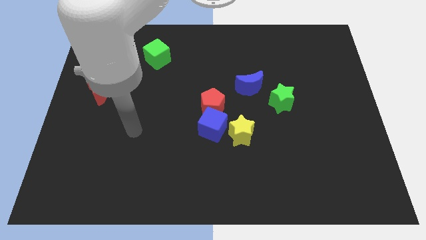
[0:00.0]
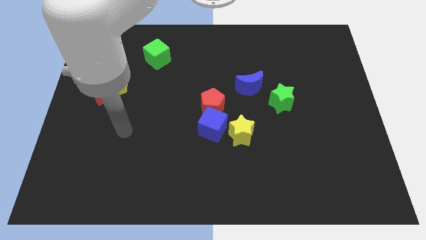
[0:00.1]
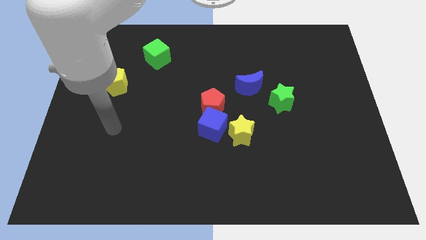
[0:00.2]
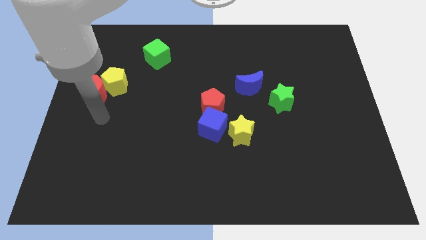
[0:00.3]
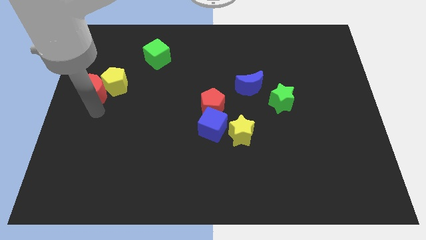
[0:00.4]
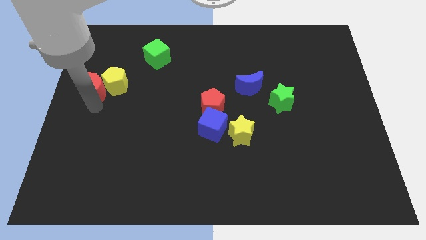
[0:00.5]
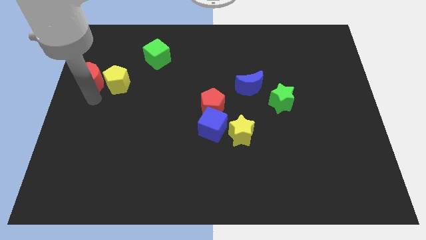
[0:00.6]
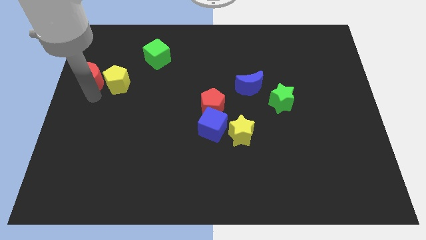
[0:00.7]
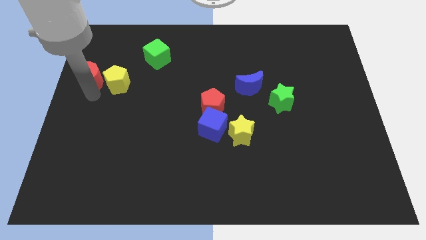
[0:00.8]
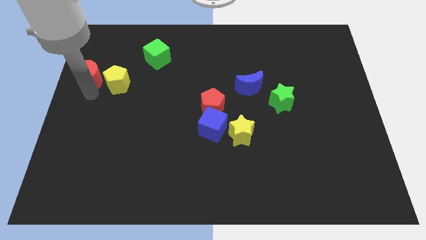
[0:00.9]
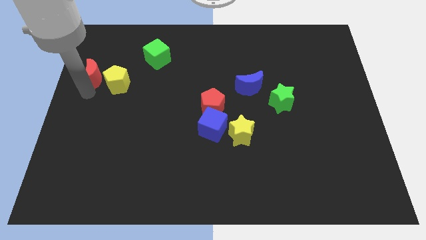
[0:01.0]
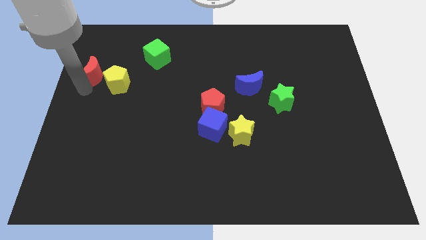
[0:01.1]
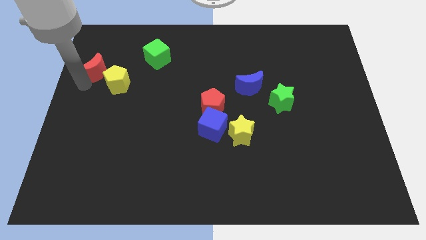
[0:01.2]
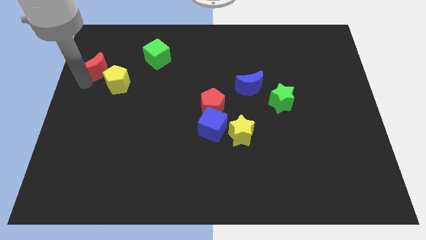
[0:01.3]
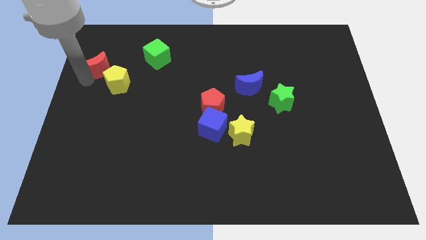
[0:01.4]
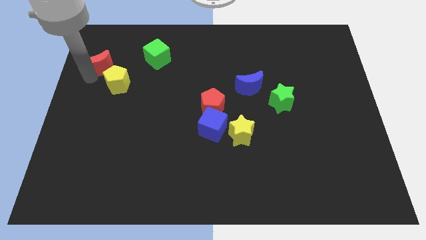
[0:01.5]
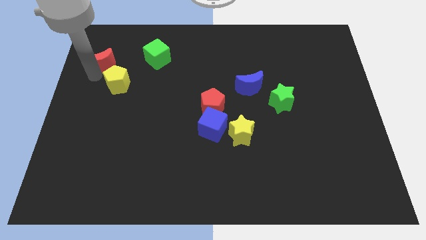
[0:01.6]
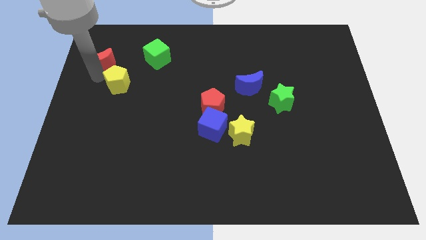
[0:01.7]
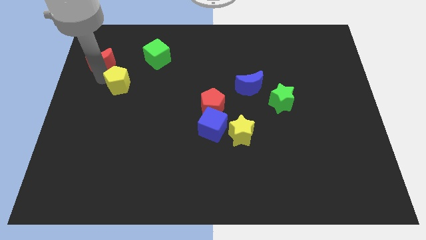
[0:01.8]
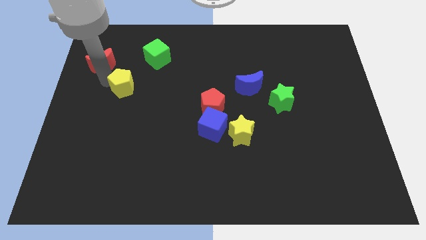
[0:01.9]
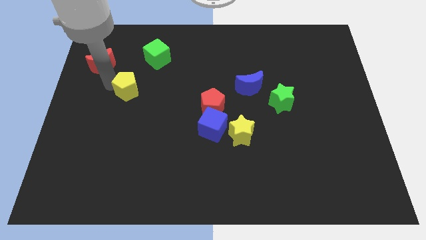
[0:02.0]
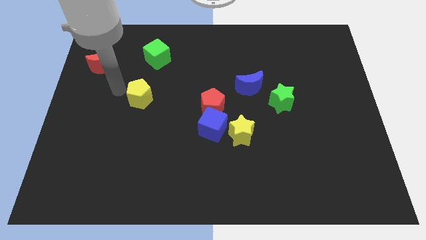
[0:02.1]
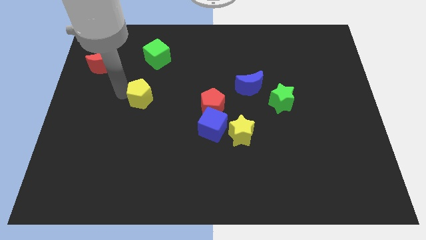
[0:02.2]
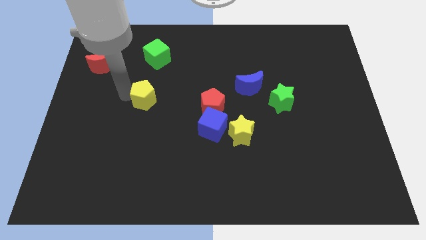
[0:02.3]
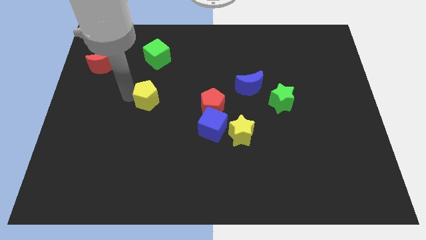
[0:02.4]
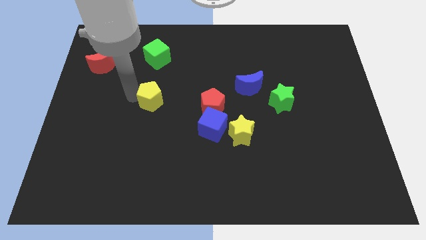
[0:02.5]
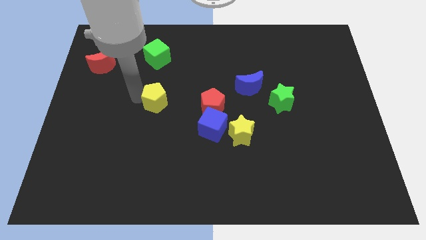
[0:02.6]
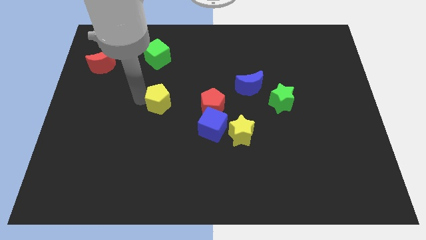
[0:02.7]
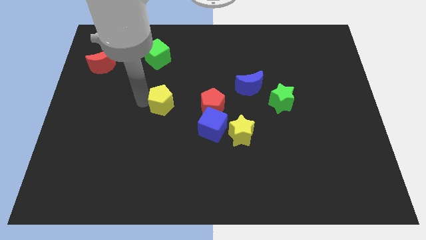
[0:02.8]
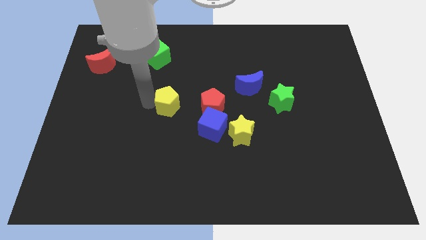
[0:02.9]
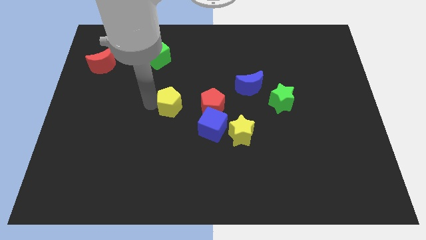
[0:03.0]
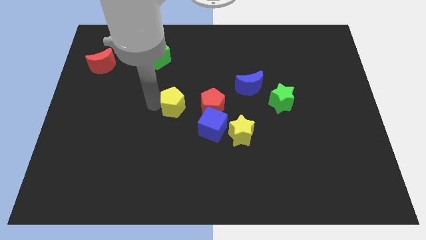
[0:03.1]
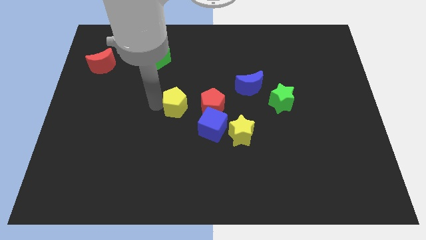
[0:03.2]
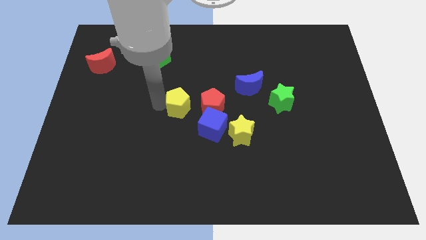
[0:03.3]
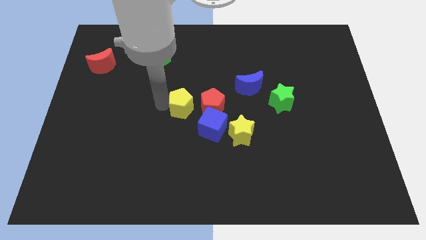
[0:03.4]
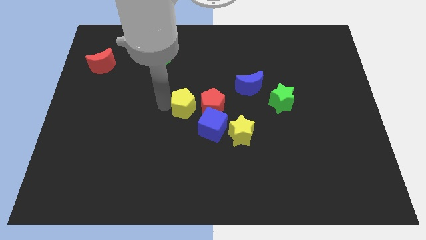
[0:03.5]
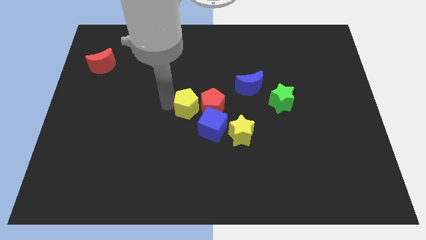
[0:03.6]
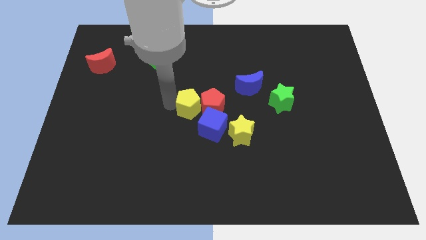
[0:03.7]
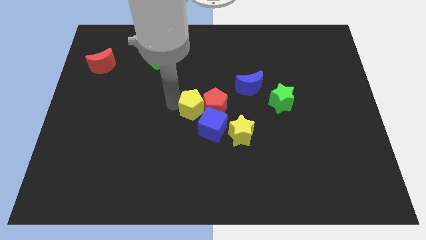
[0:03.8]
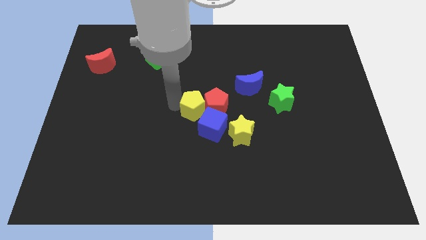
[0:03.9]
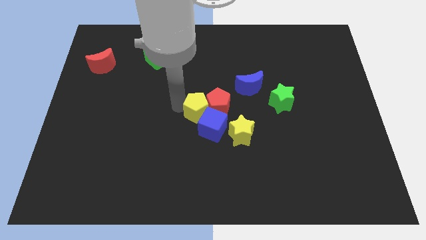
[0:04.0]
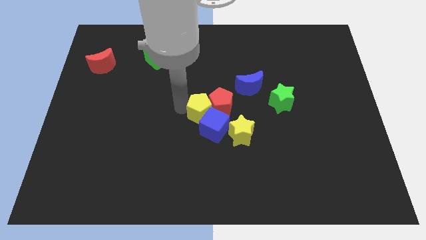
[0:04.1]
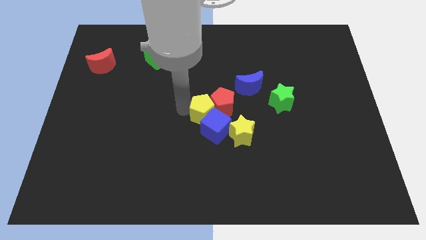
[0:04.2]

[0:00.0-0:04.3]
slide the yellow pentagon to the blue cube

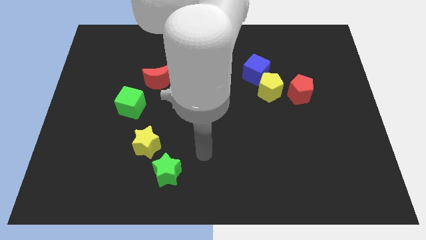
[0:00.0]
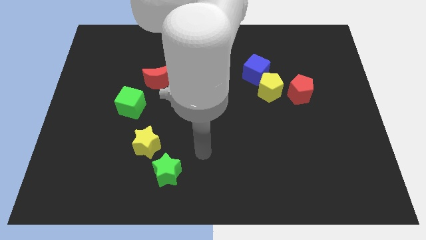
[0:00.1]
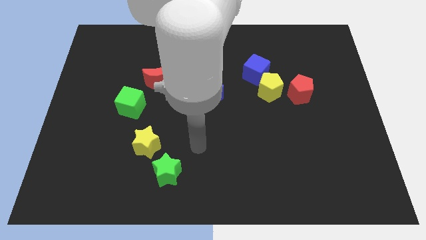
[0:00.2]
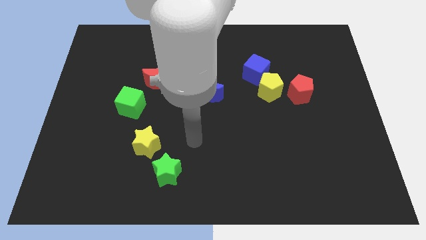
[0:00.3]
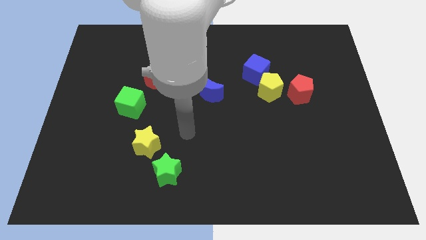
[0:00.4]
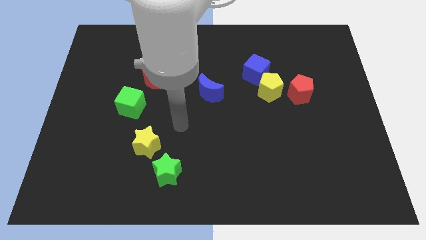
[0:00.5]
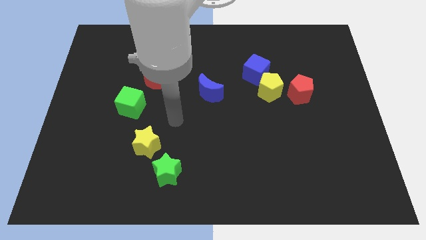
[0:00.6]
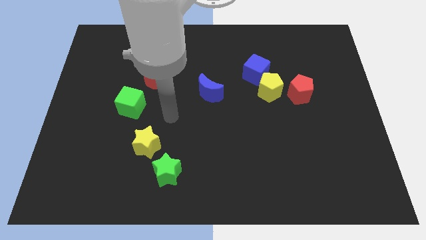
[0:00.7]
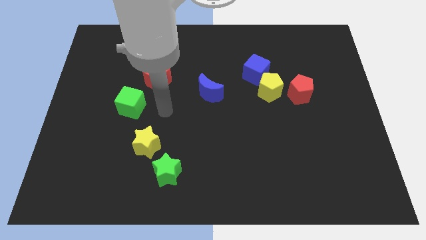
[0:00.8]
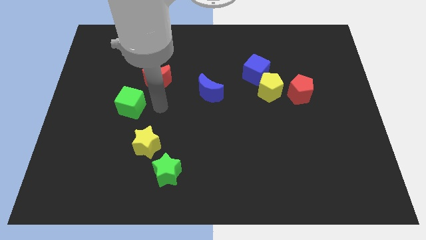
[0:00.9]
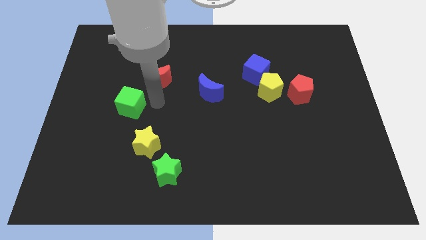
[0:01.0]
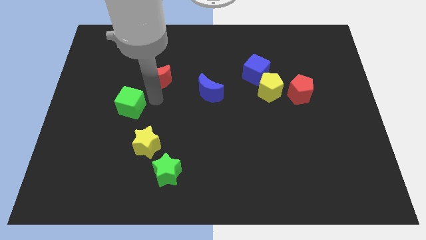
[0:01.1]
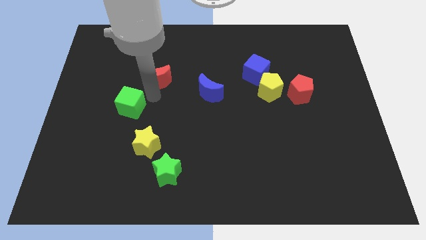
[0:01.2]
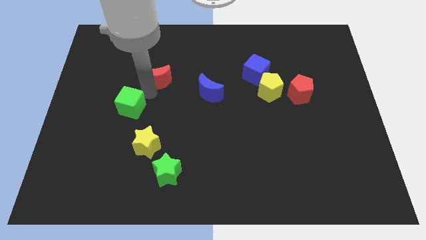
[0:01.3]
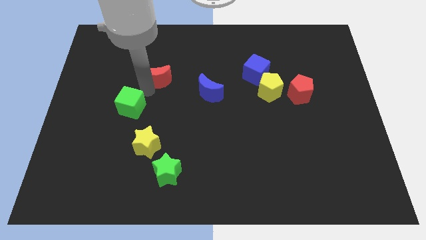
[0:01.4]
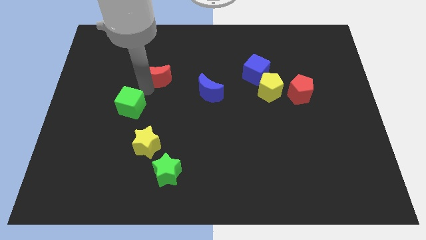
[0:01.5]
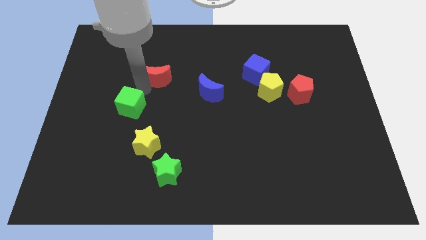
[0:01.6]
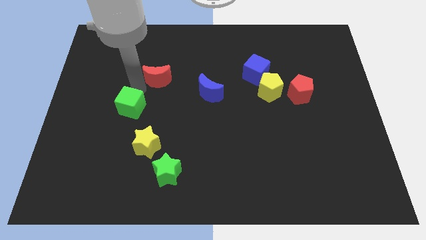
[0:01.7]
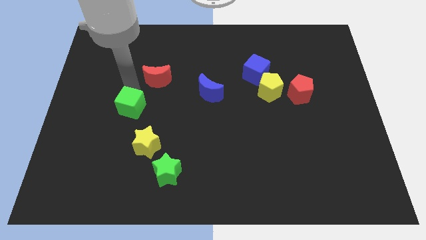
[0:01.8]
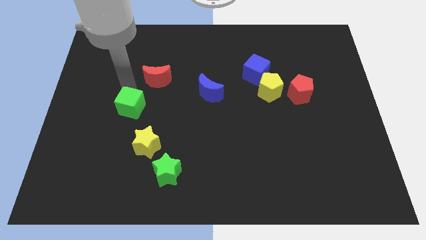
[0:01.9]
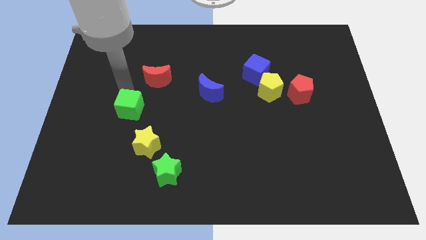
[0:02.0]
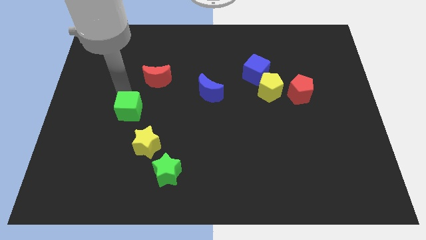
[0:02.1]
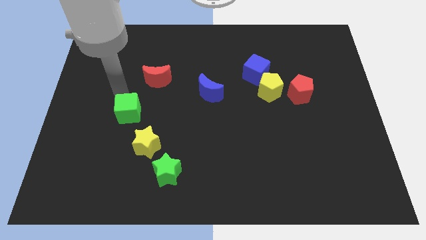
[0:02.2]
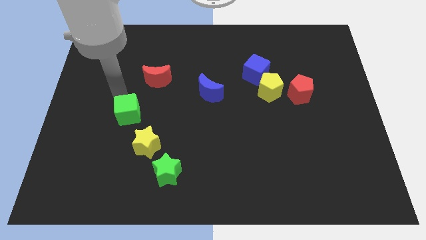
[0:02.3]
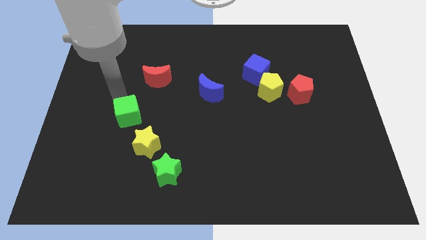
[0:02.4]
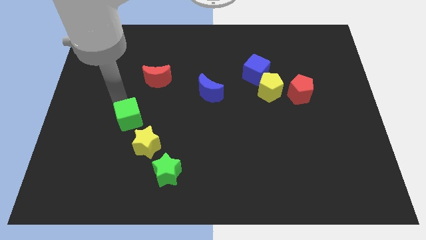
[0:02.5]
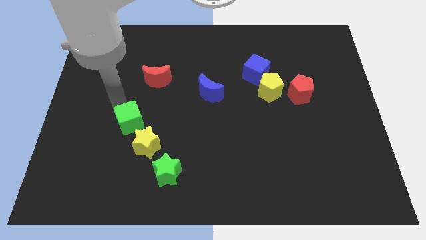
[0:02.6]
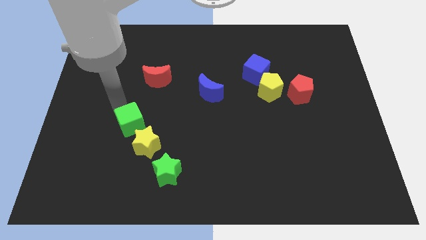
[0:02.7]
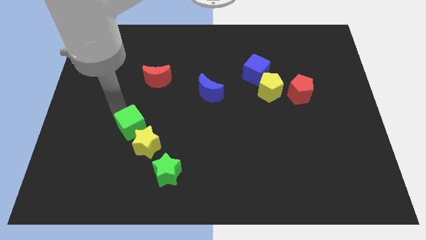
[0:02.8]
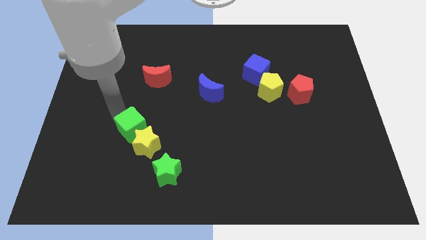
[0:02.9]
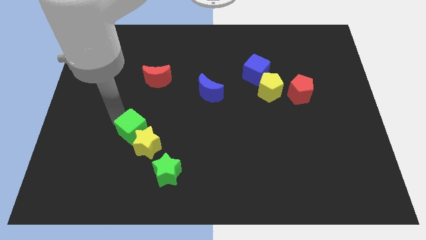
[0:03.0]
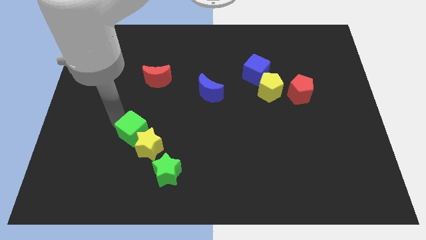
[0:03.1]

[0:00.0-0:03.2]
put the green cube next to the yellow star

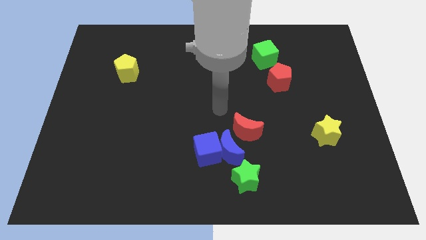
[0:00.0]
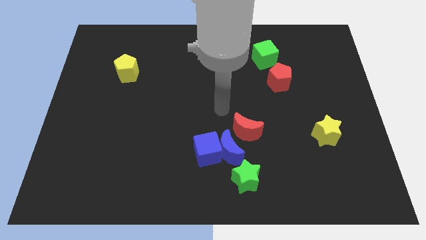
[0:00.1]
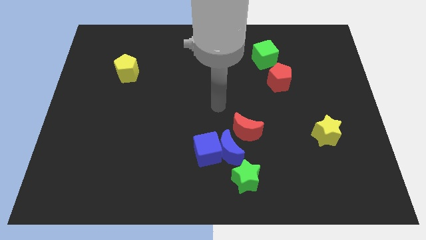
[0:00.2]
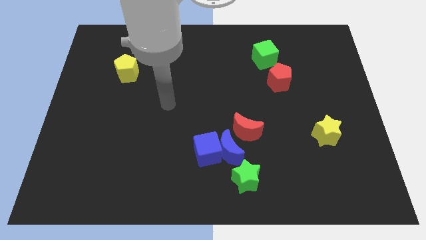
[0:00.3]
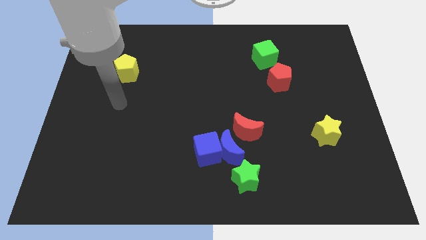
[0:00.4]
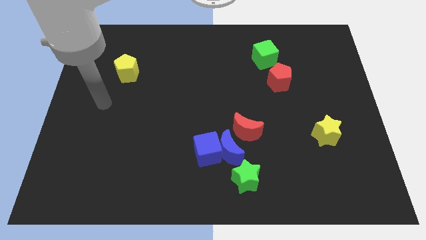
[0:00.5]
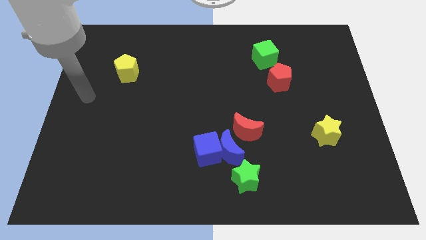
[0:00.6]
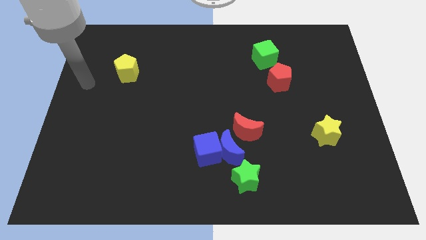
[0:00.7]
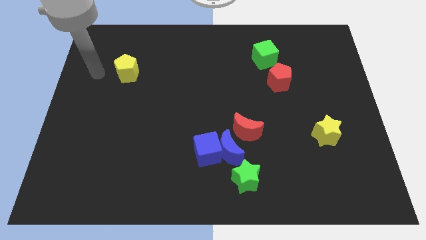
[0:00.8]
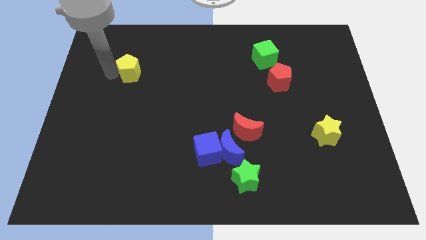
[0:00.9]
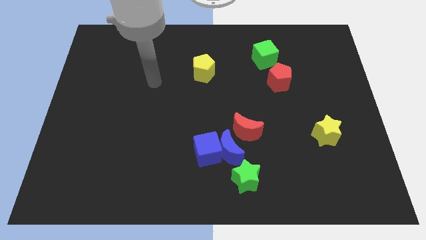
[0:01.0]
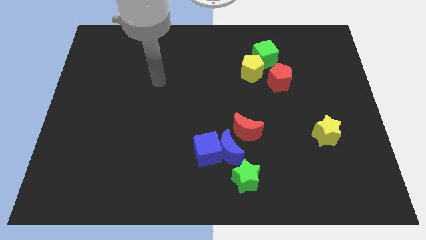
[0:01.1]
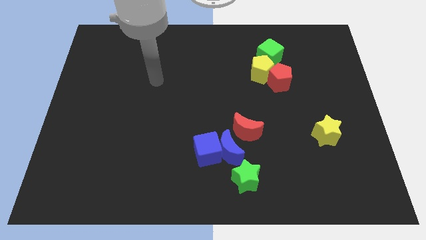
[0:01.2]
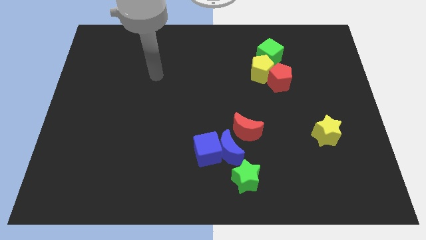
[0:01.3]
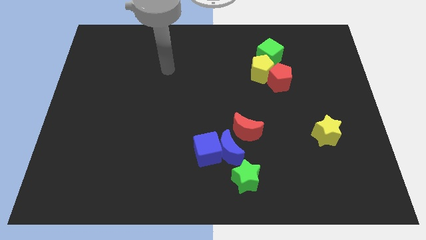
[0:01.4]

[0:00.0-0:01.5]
push the yellow pentagon to the red pentagon
